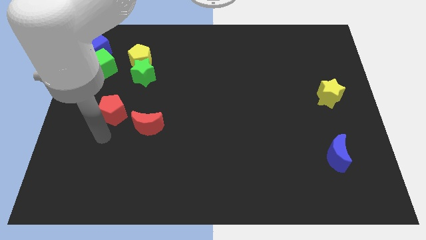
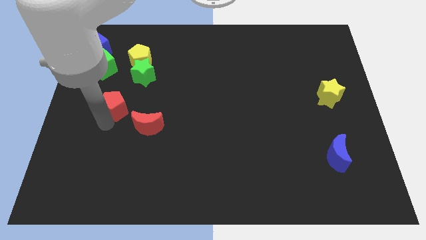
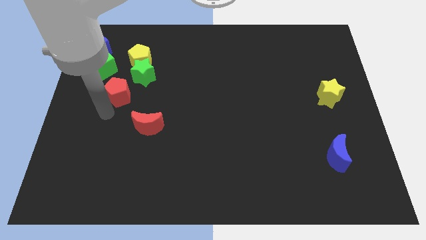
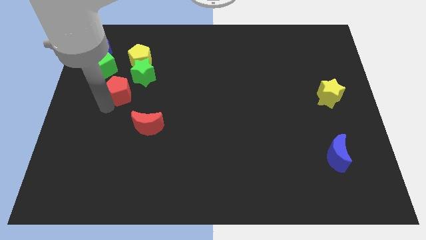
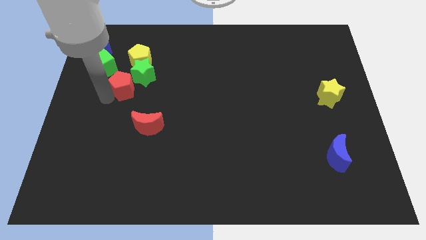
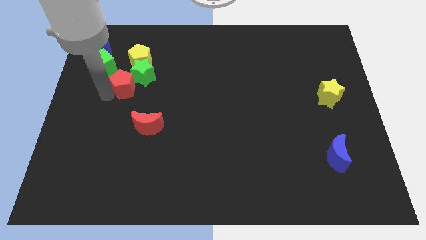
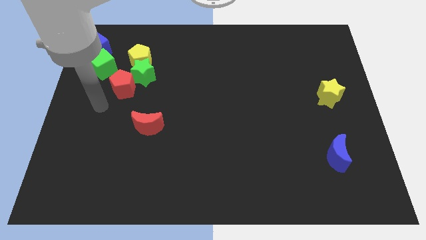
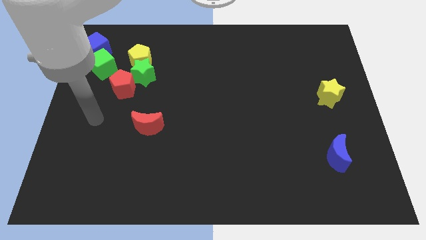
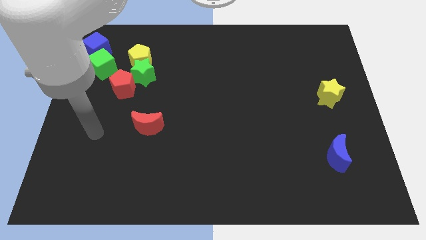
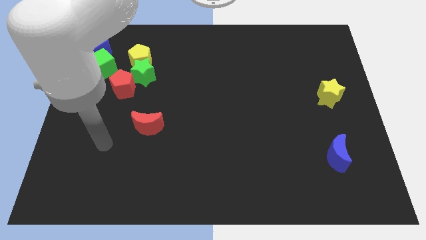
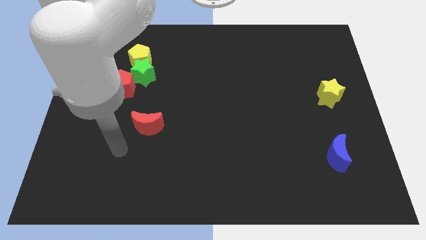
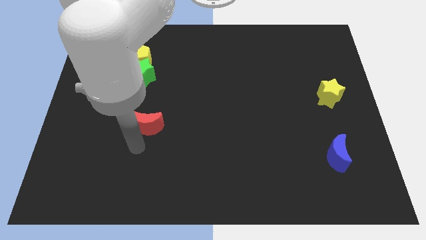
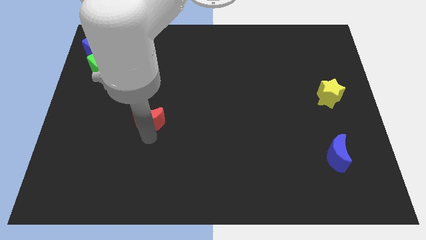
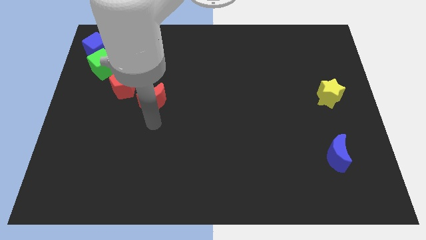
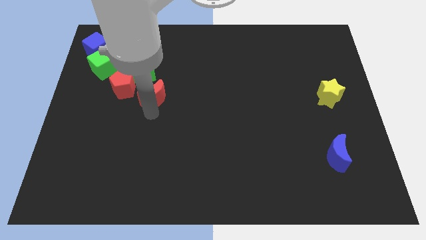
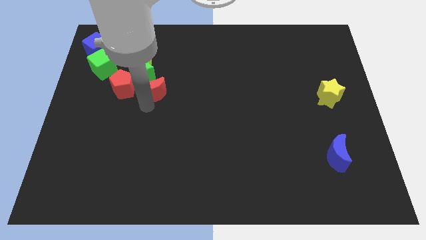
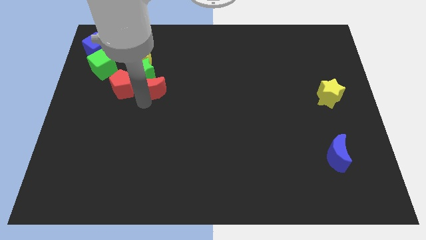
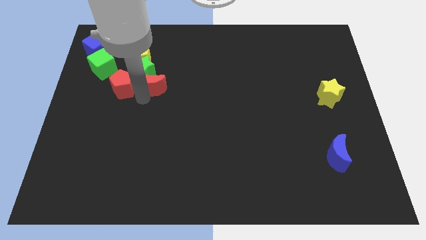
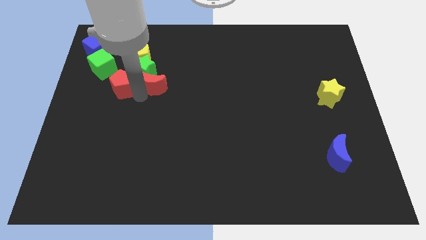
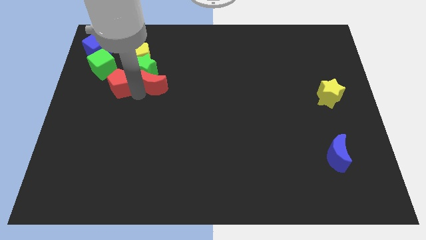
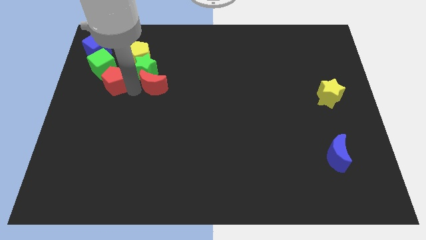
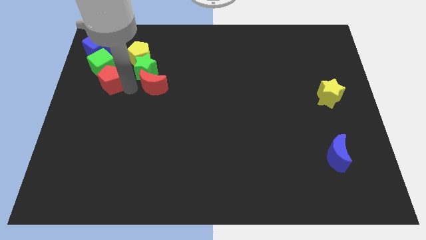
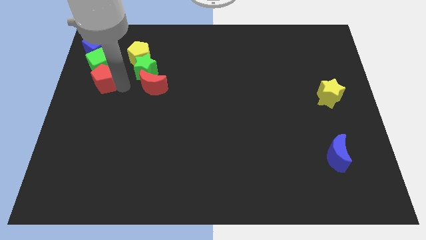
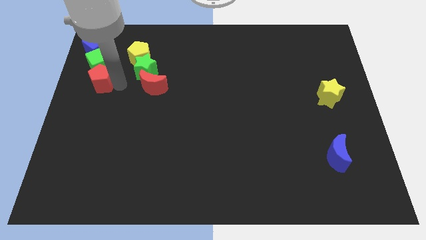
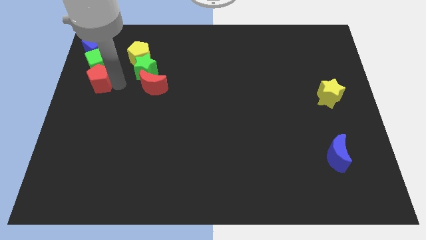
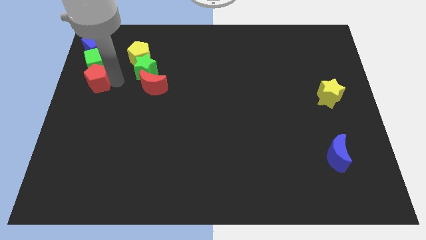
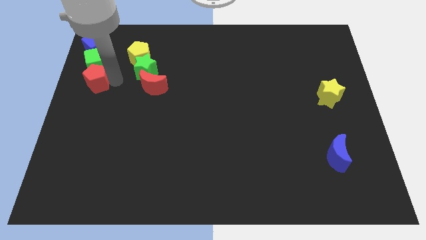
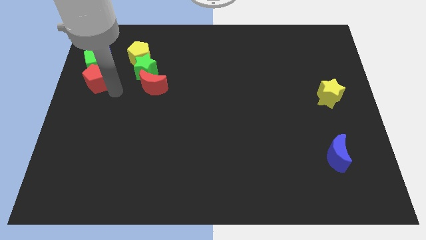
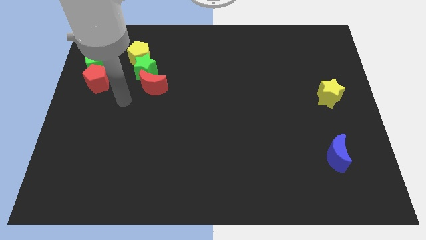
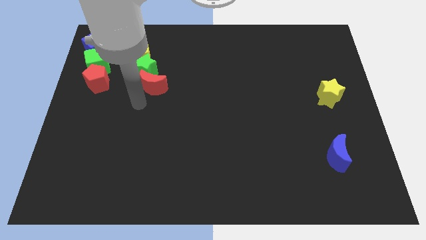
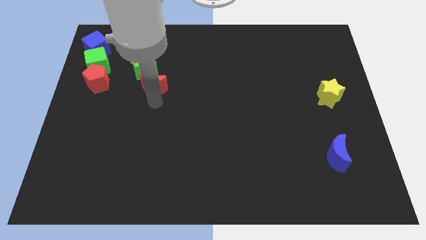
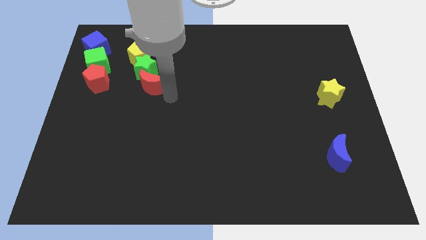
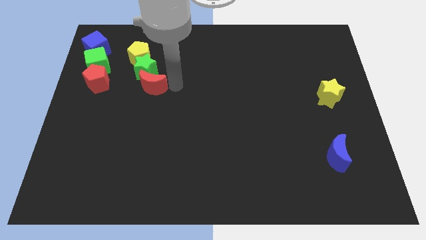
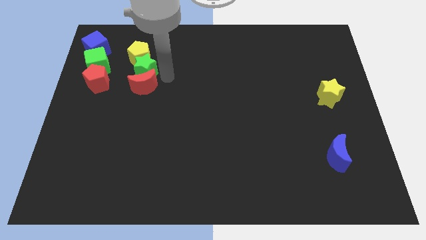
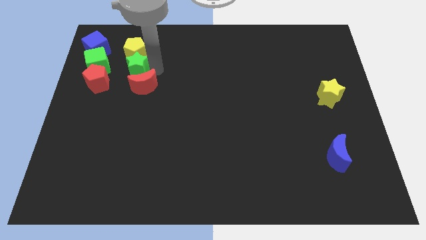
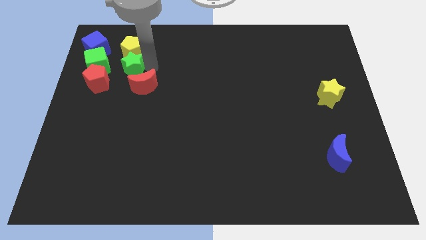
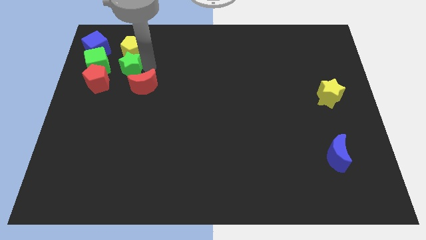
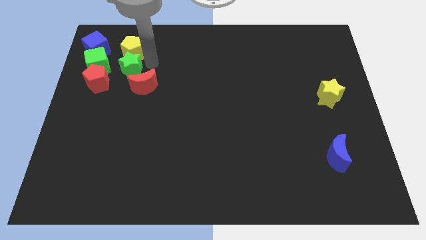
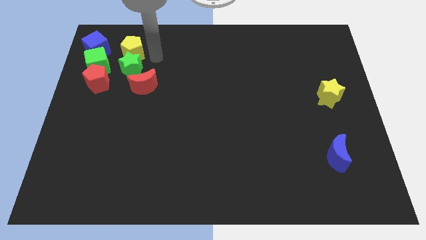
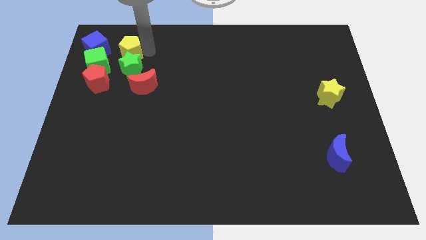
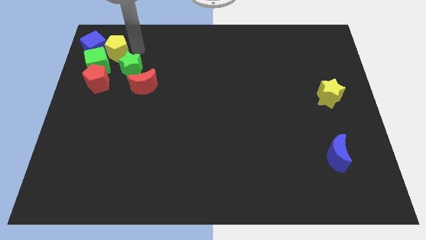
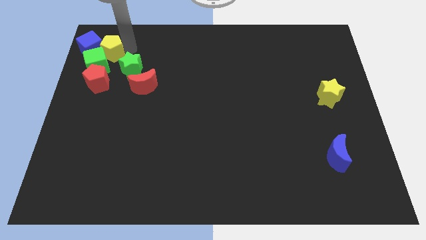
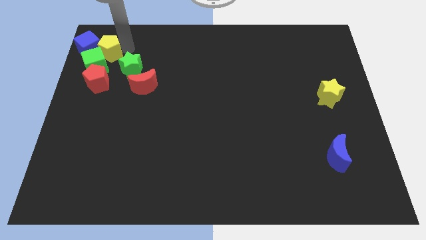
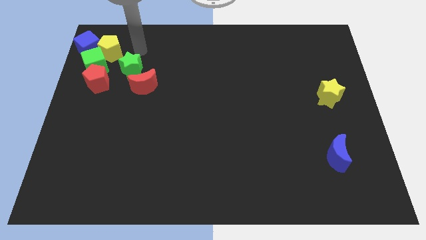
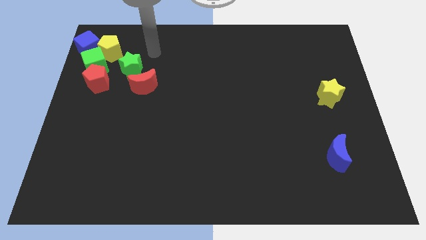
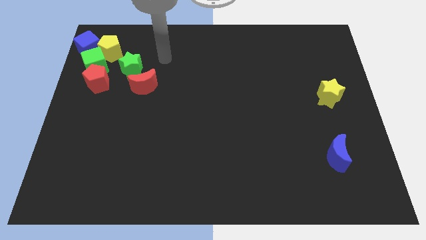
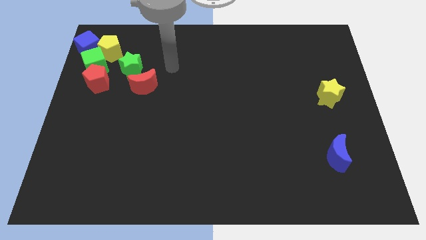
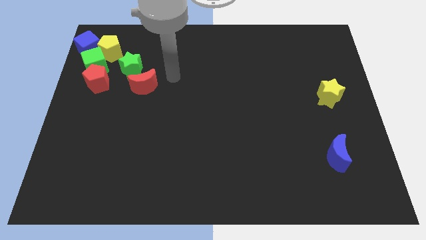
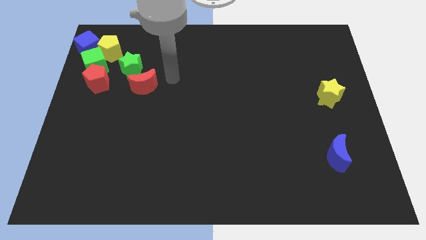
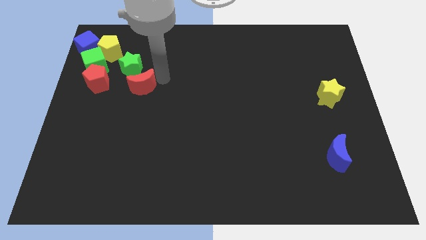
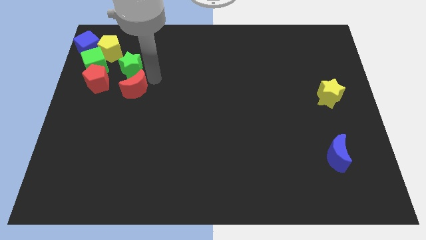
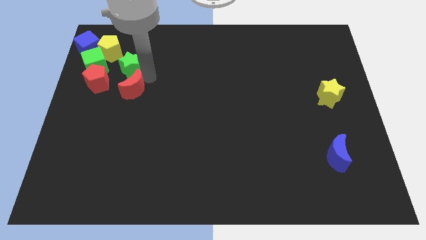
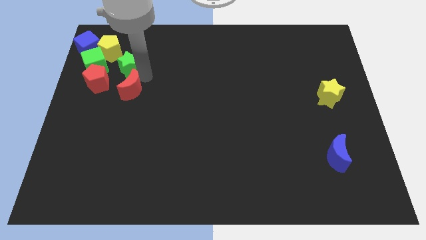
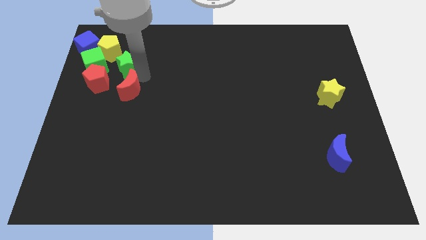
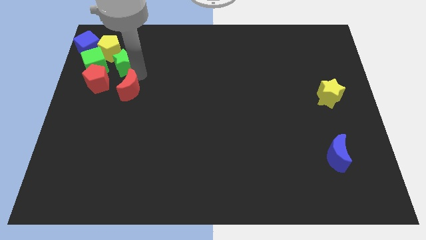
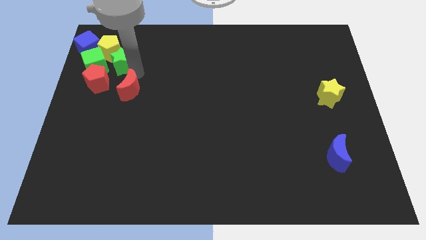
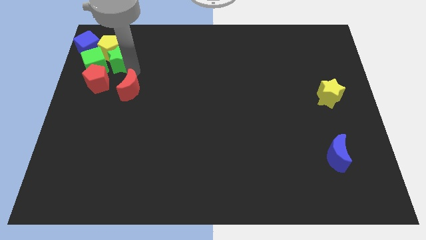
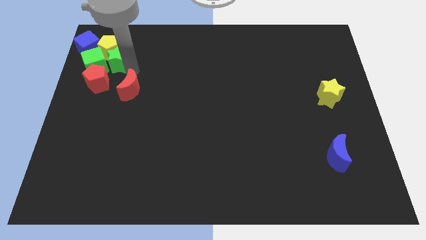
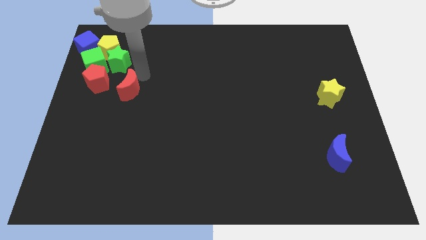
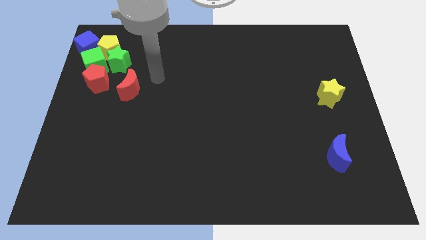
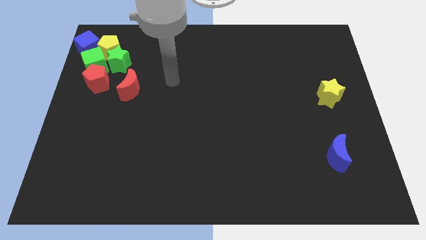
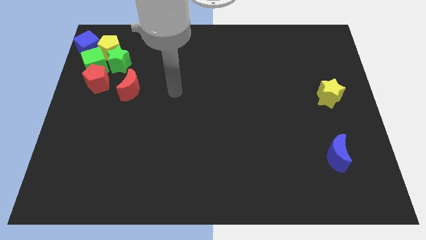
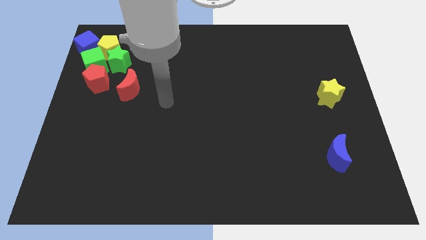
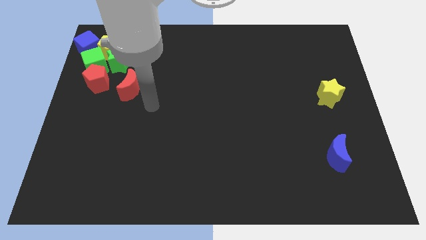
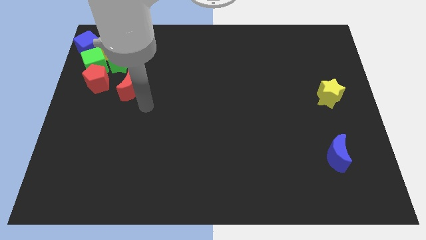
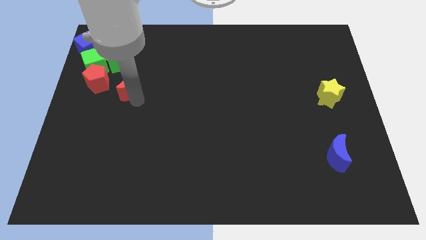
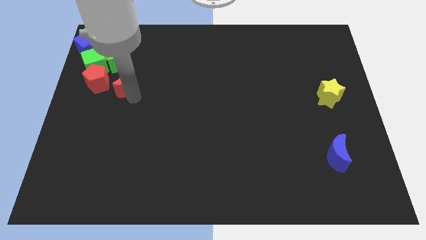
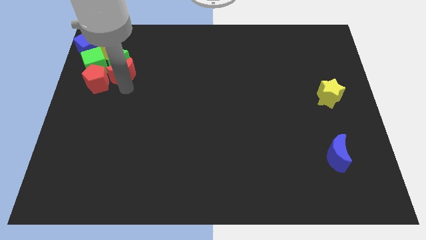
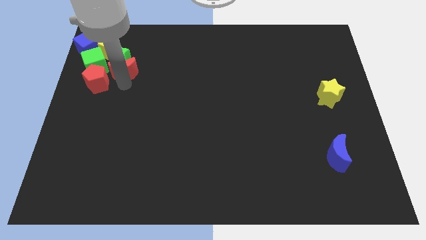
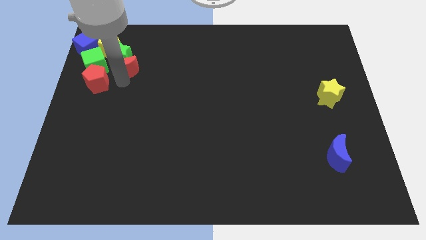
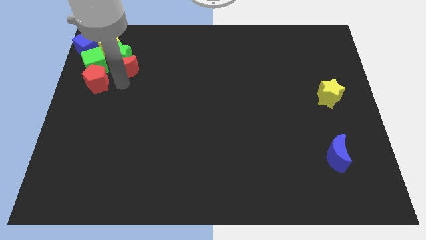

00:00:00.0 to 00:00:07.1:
group up all the blocks at the top left side of the table except the blue moon and yellow star

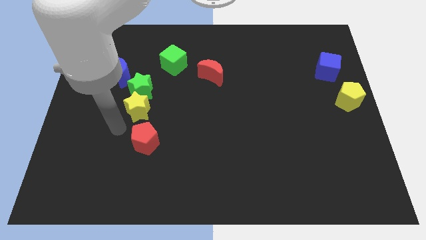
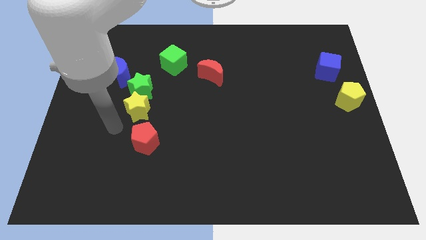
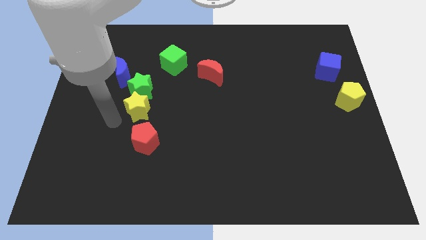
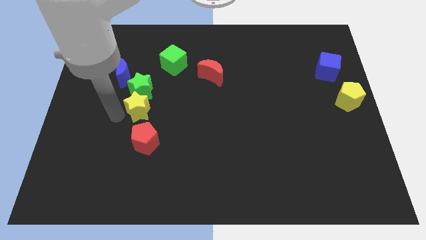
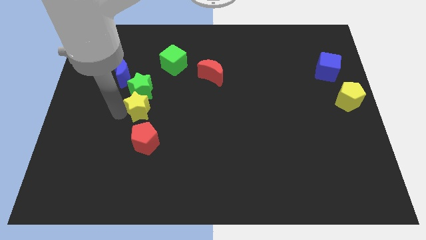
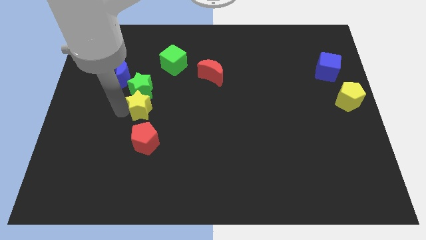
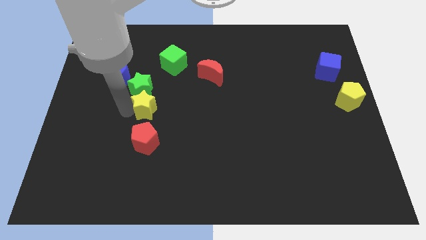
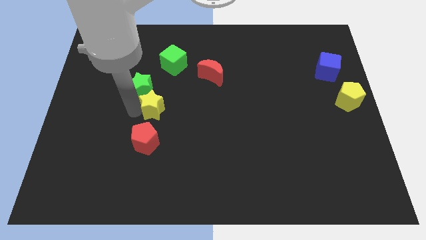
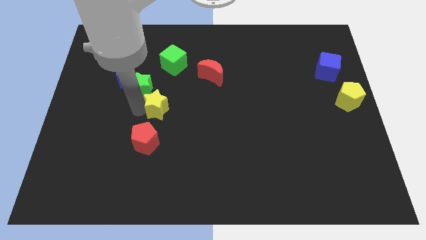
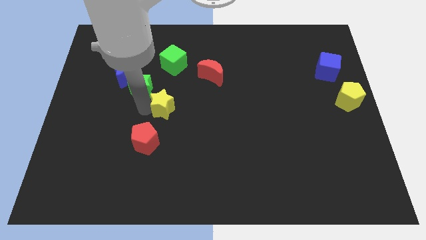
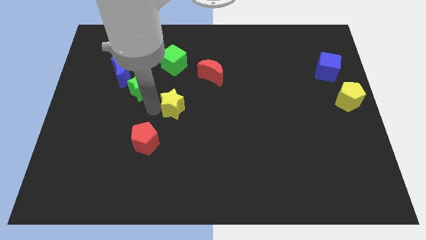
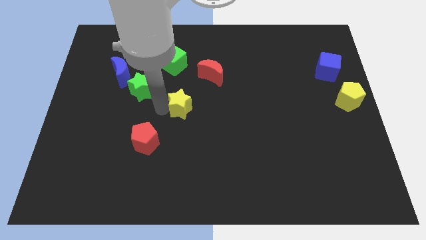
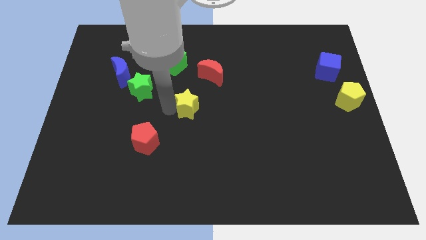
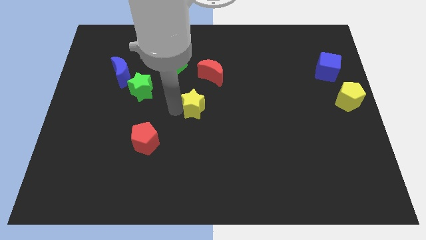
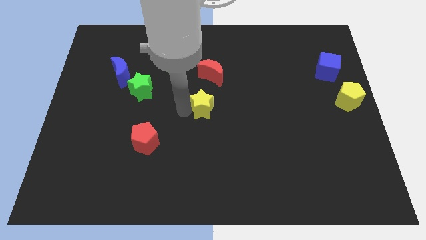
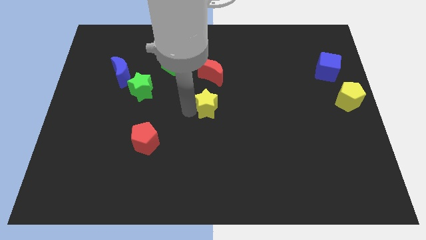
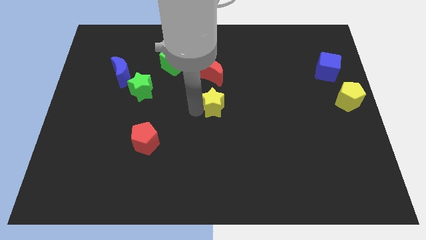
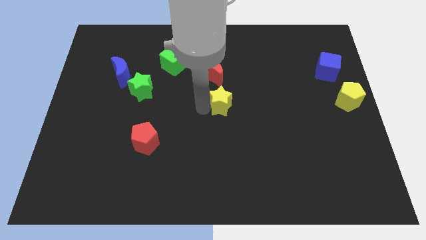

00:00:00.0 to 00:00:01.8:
push the yellow star to the center

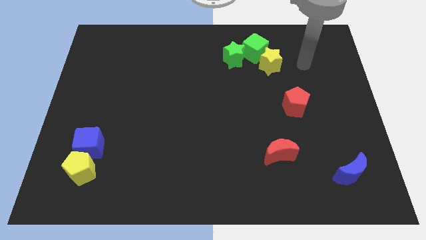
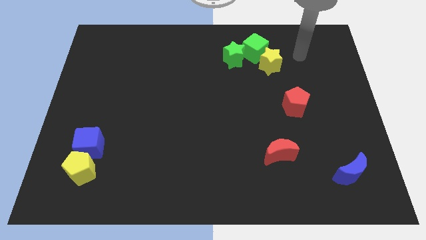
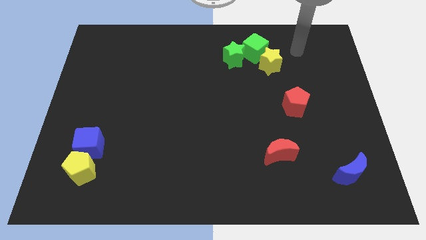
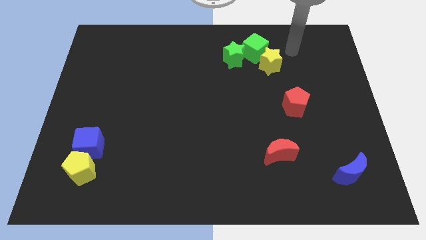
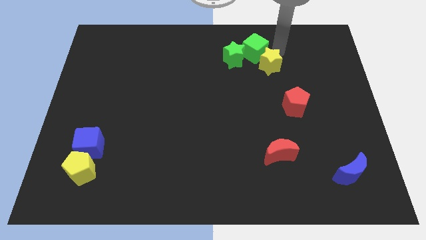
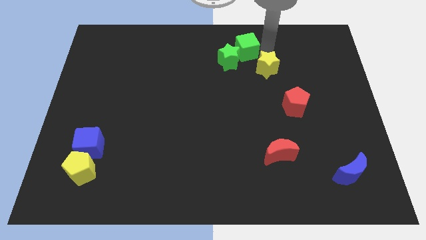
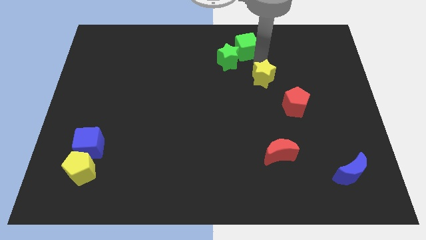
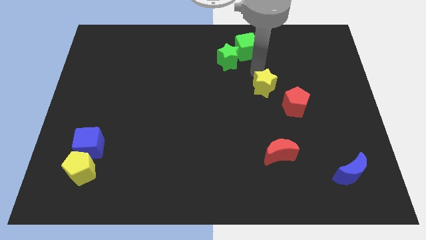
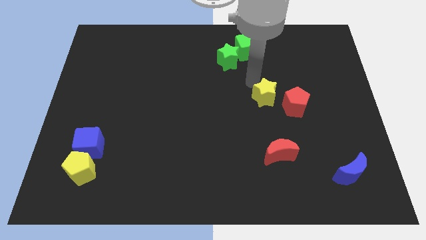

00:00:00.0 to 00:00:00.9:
separate the yellow star and the green cube
